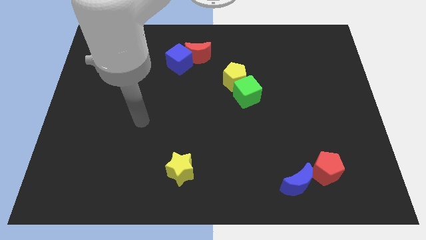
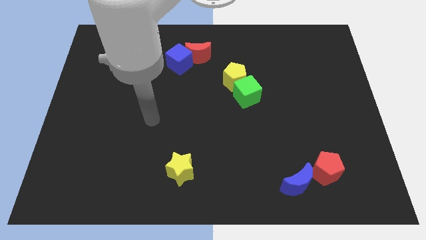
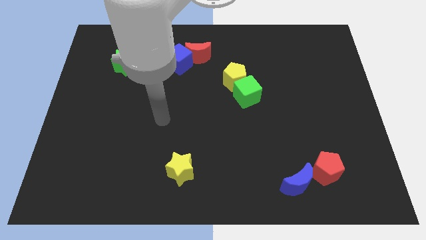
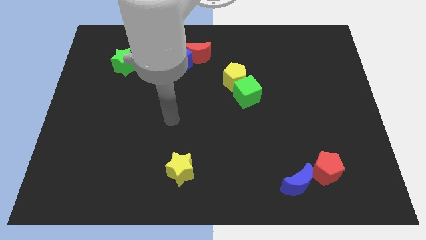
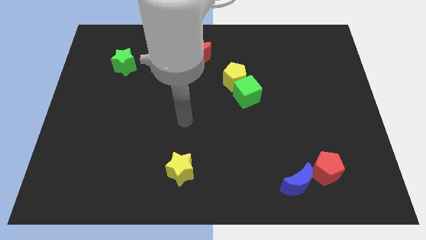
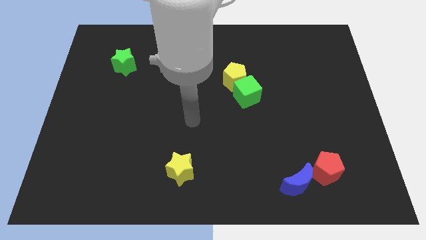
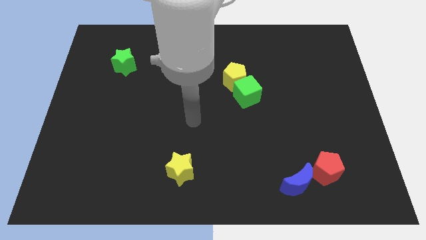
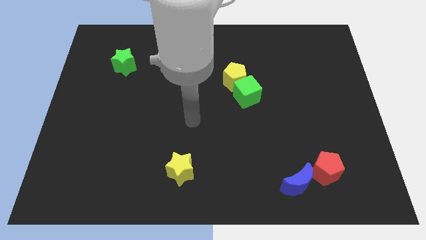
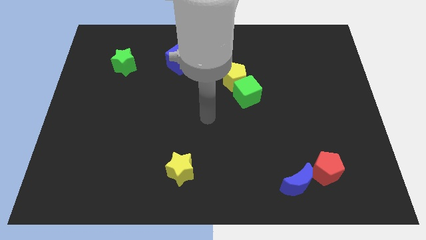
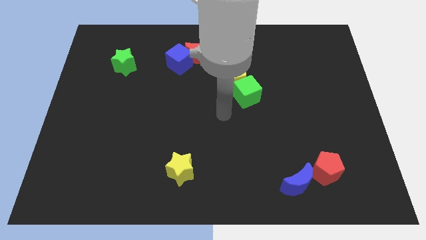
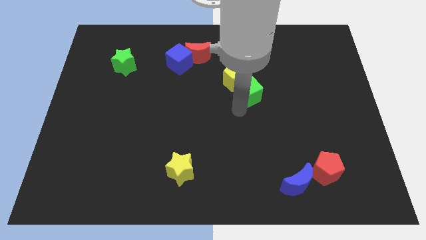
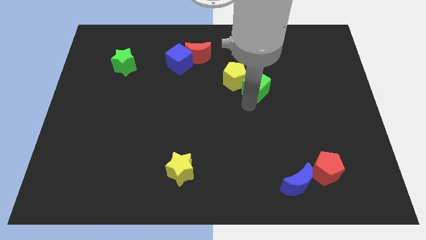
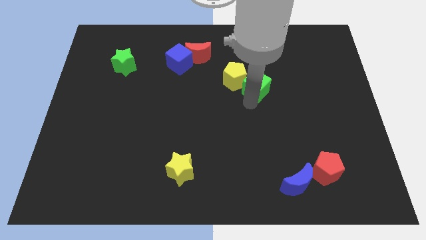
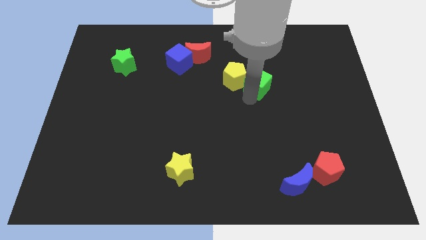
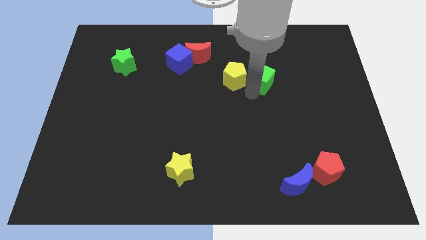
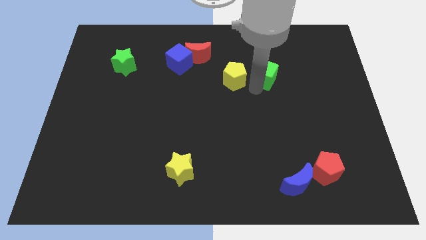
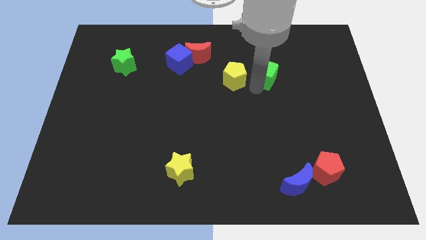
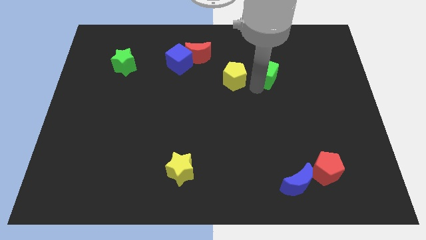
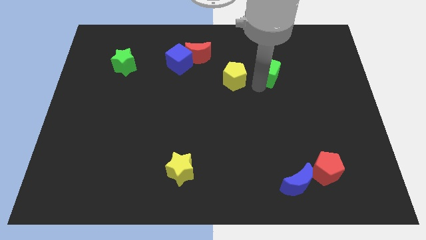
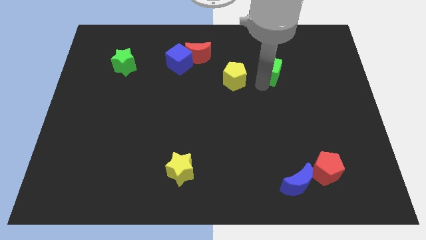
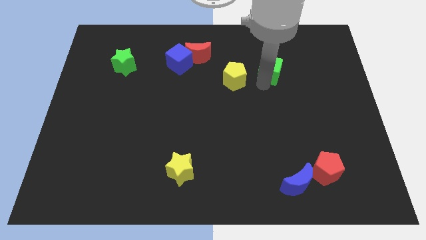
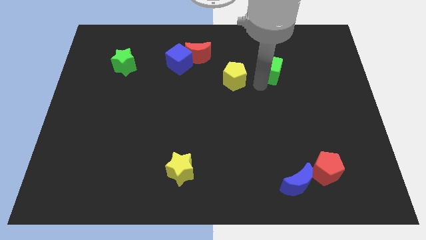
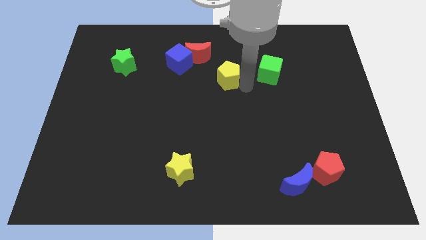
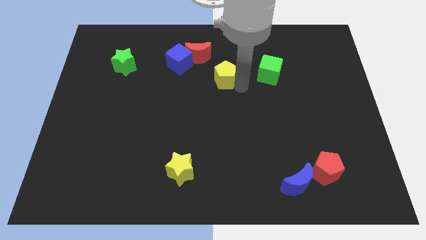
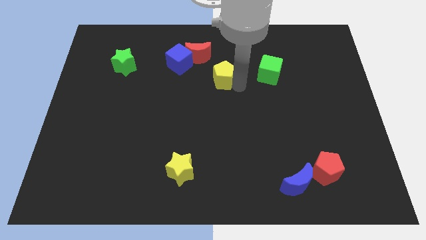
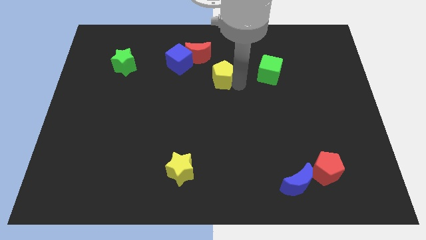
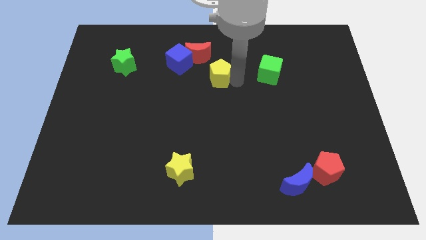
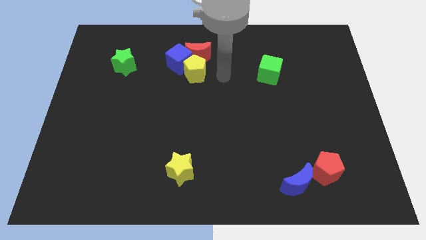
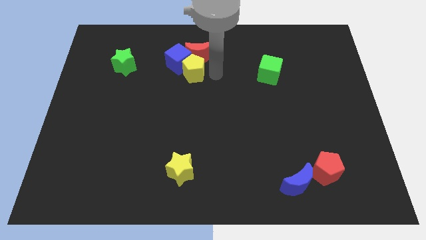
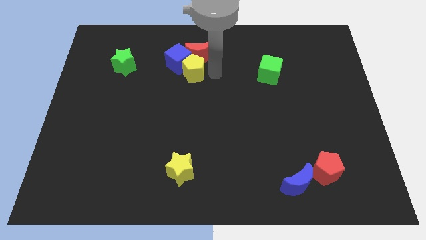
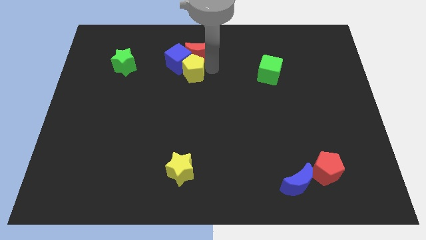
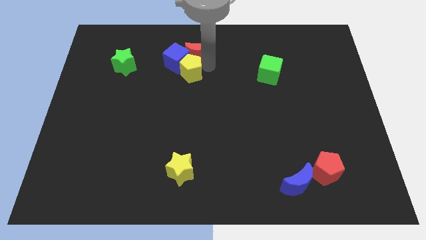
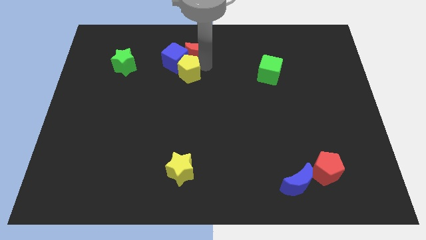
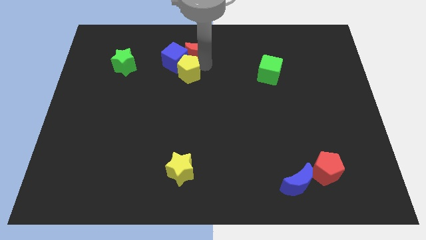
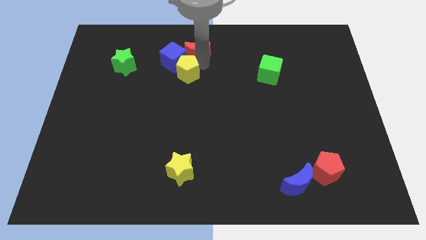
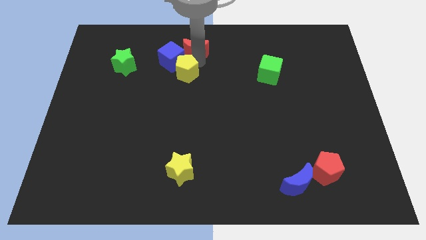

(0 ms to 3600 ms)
separate the yellow pentagon and green cube

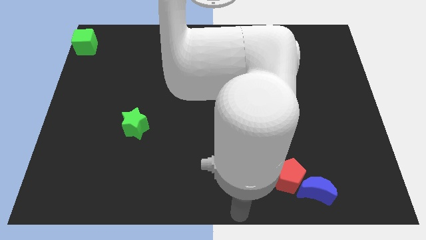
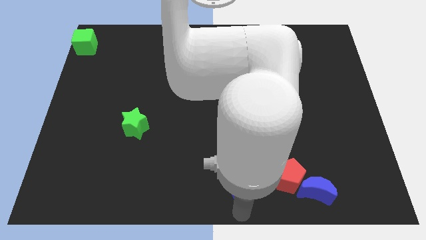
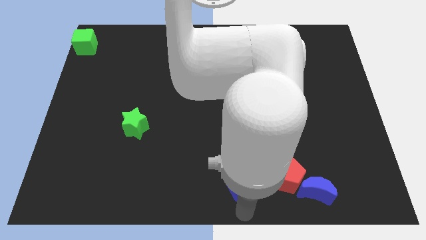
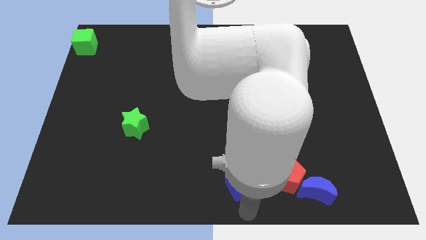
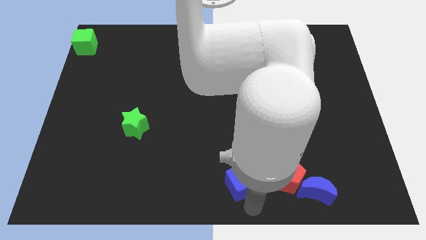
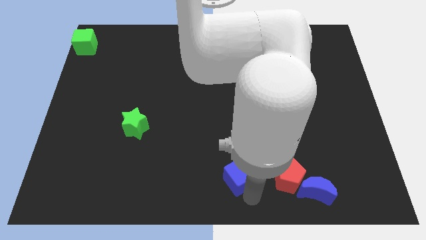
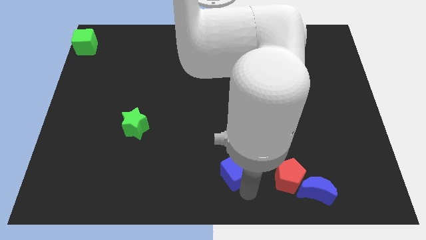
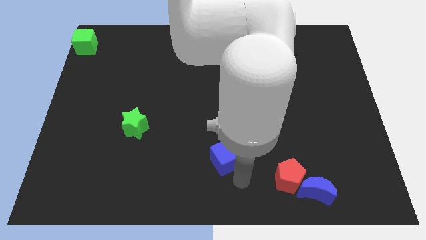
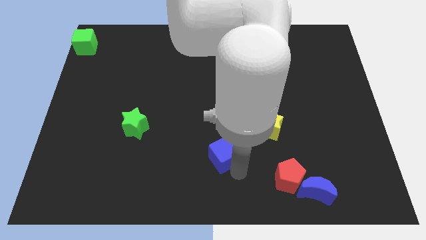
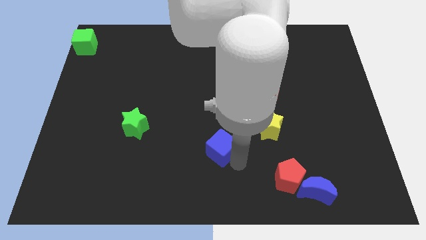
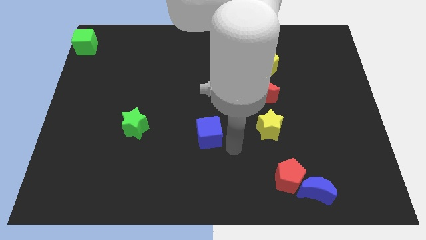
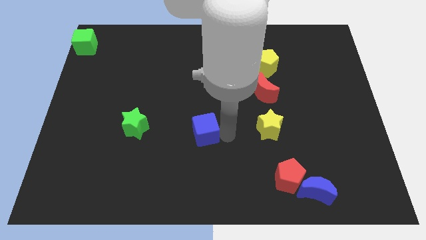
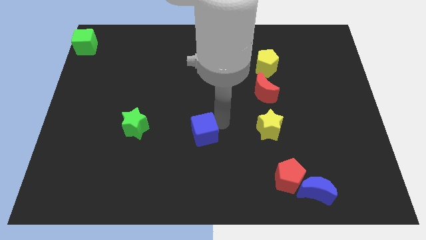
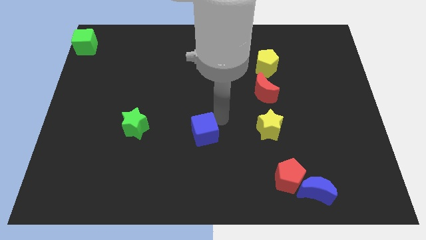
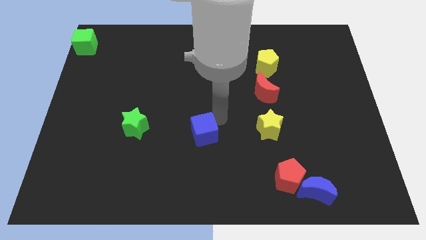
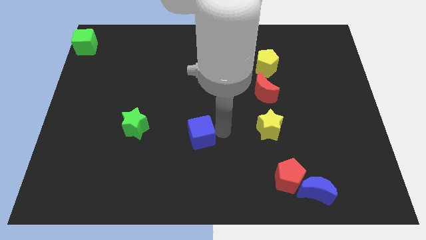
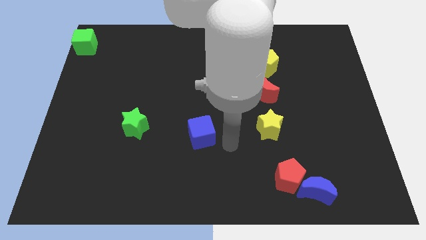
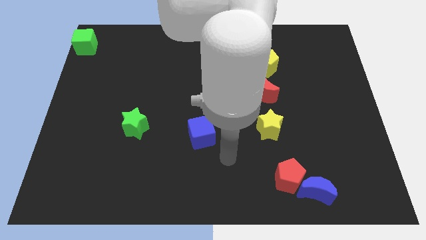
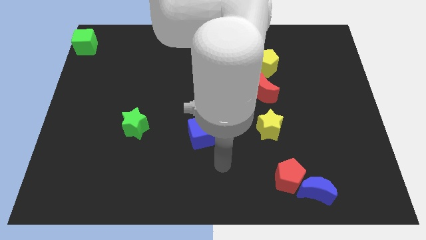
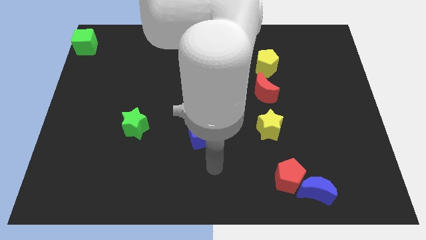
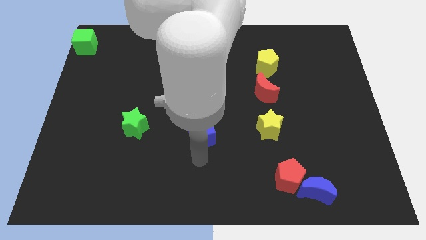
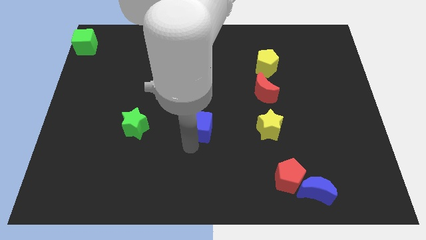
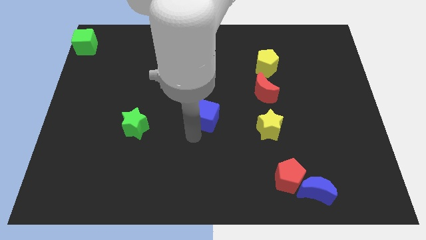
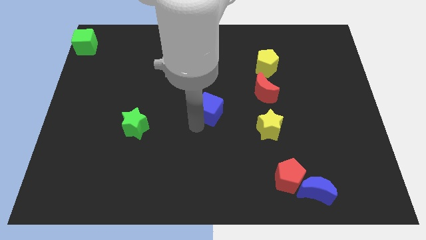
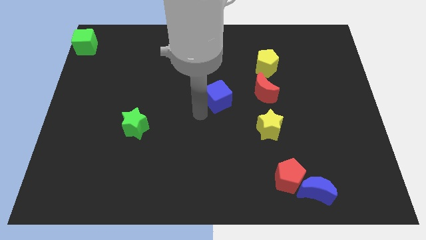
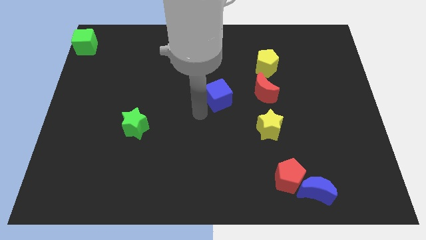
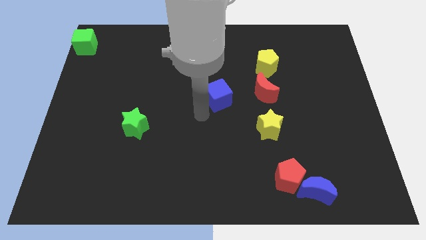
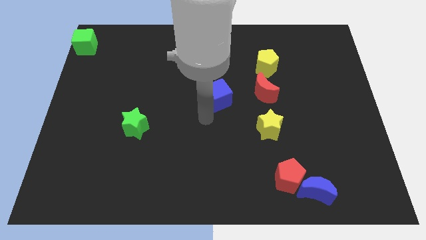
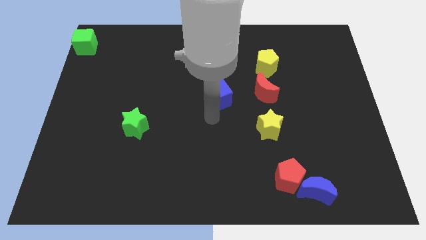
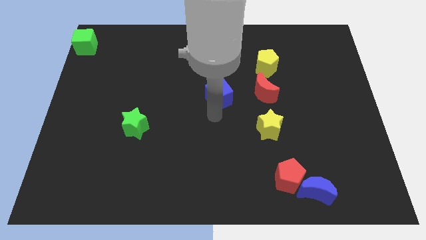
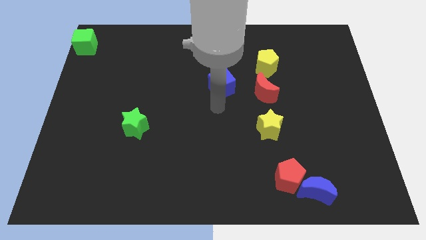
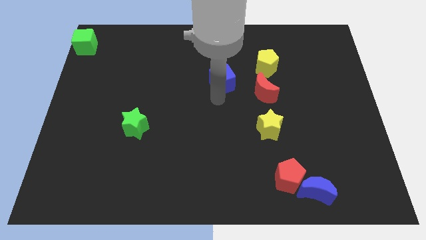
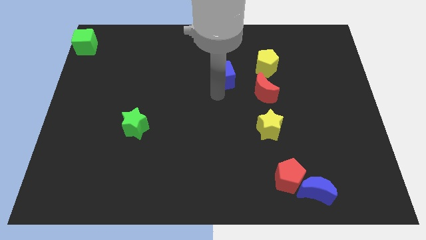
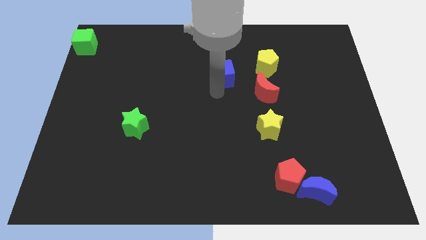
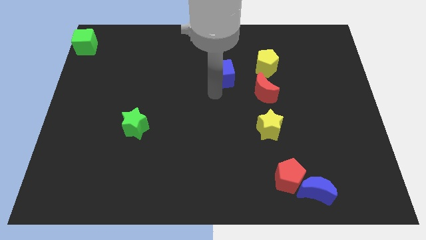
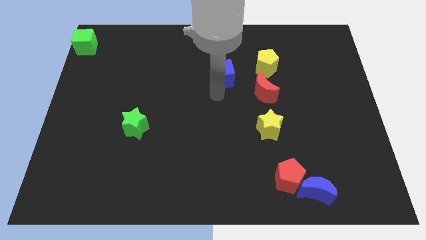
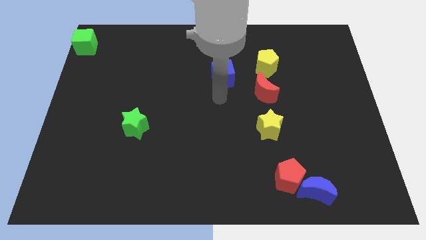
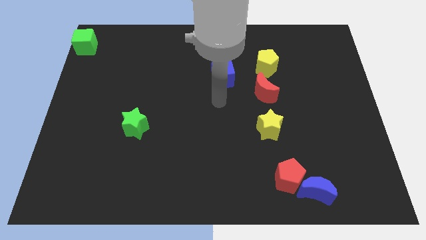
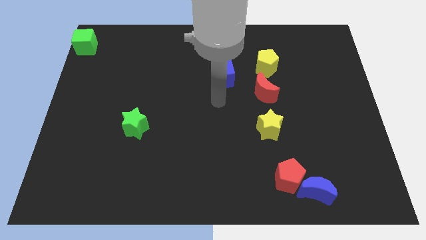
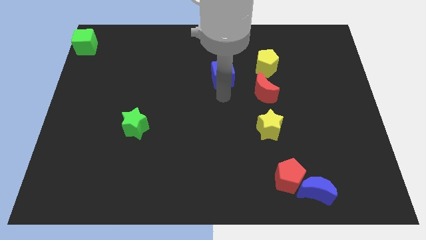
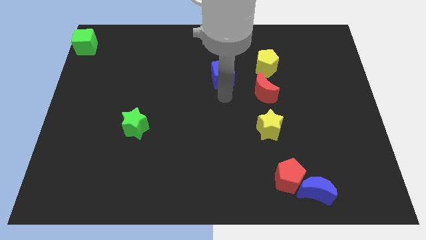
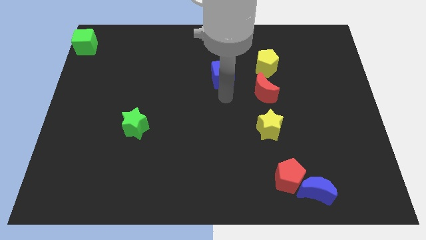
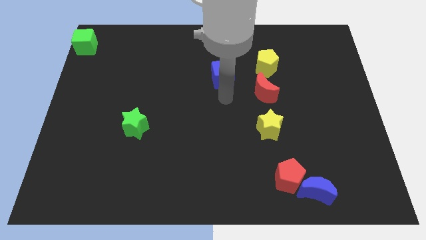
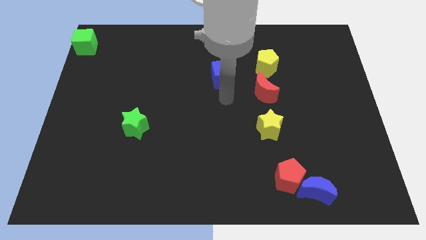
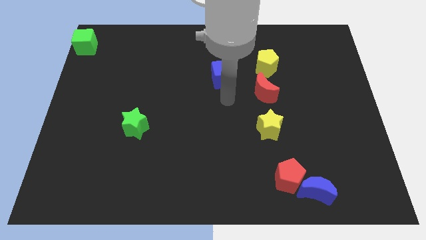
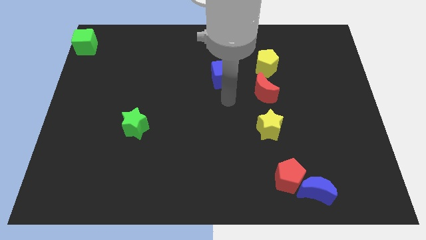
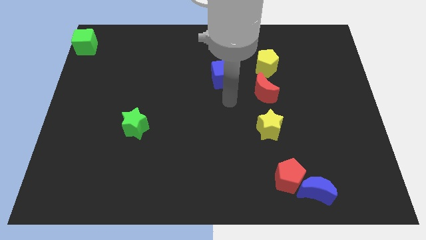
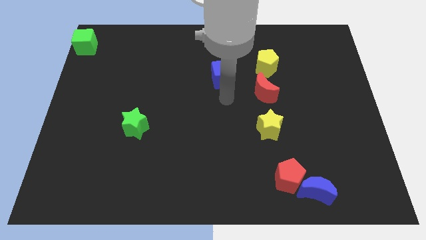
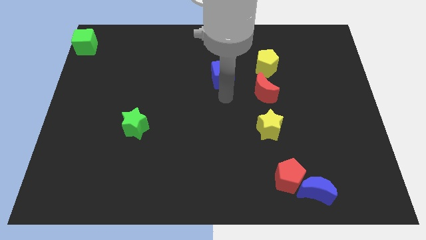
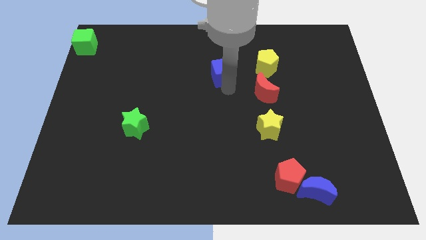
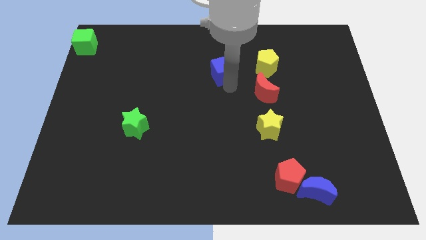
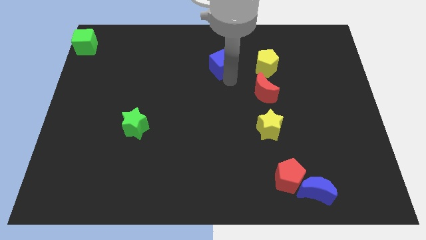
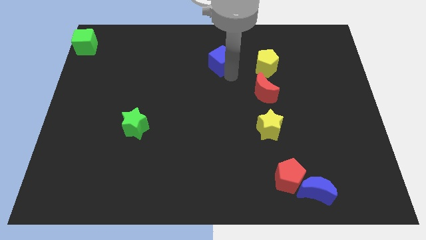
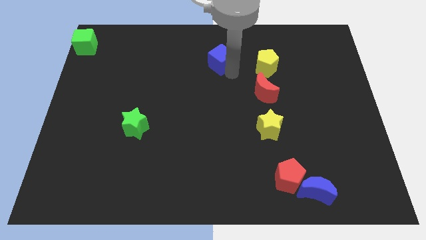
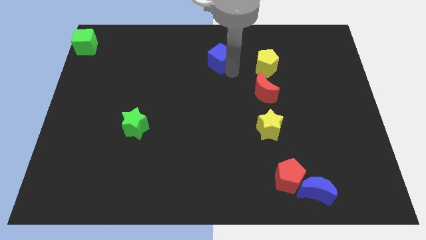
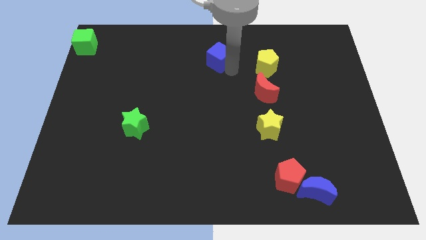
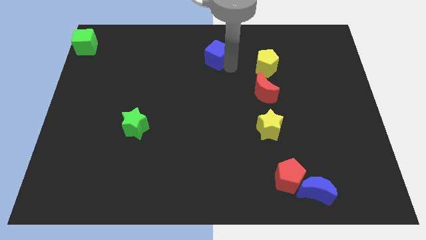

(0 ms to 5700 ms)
place the blue cube left to the yellow pentagon
